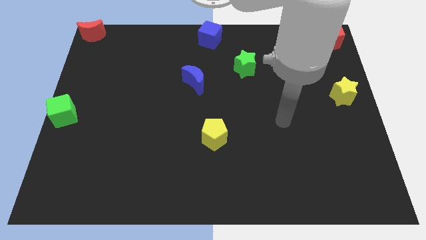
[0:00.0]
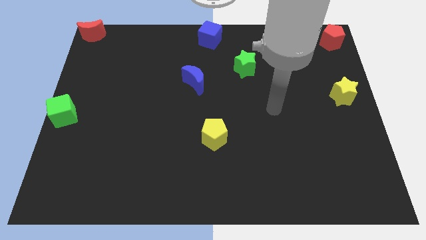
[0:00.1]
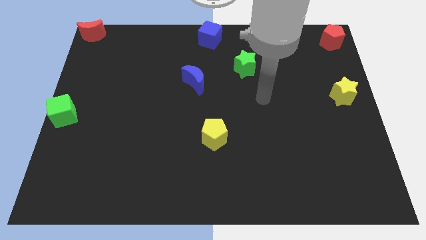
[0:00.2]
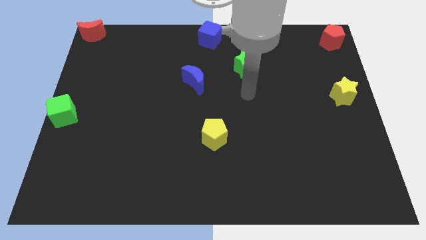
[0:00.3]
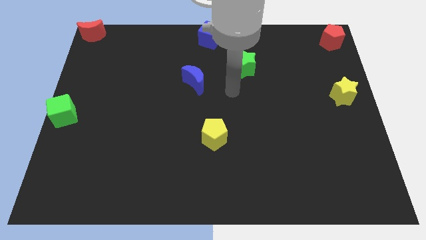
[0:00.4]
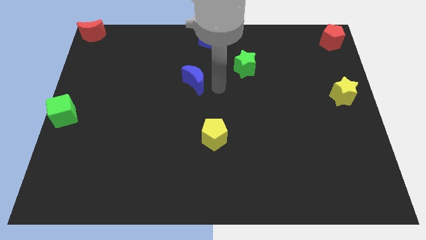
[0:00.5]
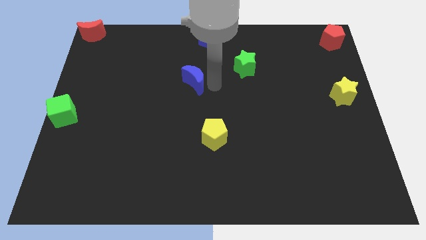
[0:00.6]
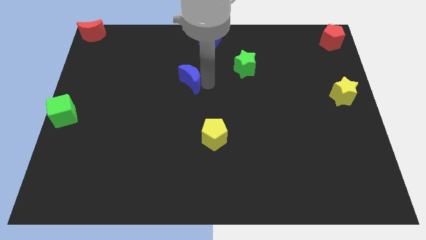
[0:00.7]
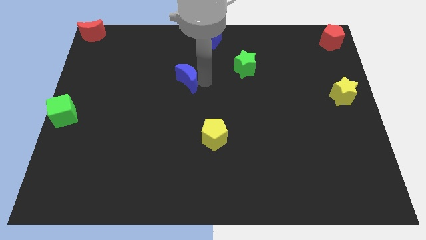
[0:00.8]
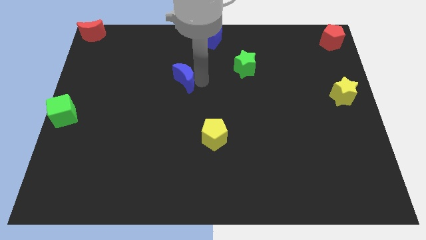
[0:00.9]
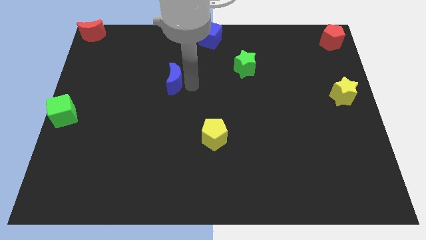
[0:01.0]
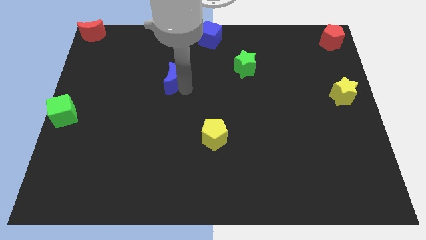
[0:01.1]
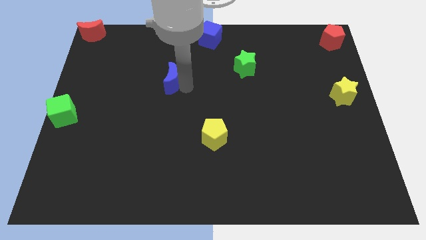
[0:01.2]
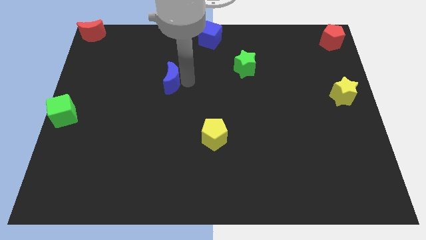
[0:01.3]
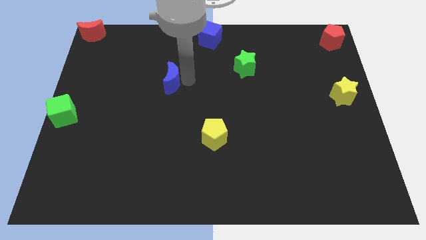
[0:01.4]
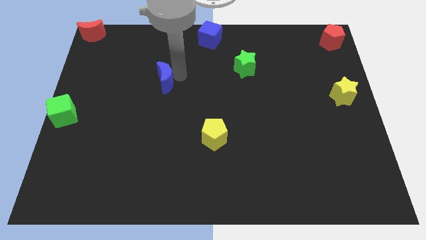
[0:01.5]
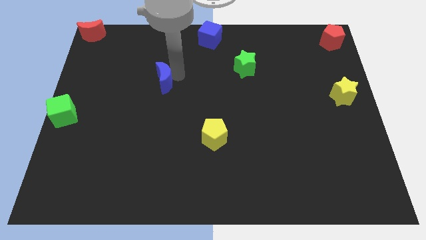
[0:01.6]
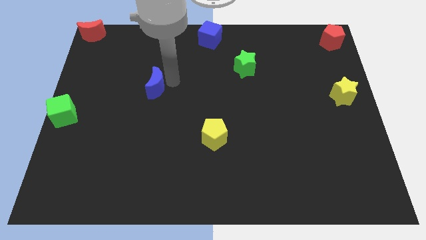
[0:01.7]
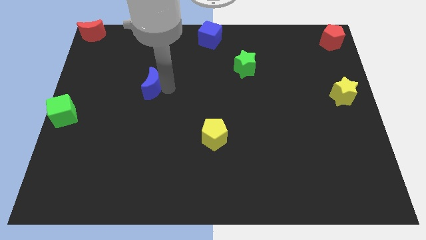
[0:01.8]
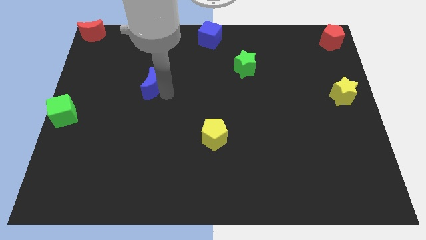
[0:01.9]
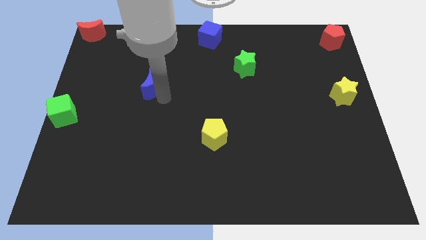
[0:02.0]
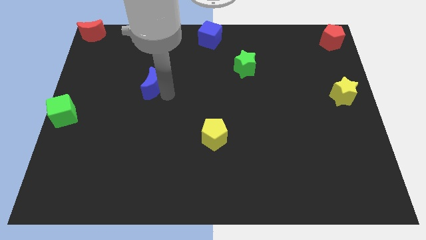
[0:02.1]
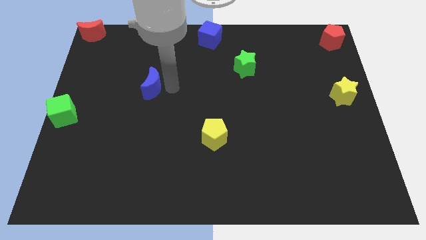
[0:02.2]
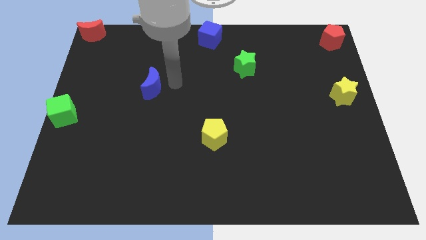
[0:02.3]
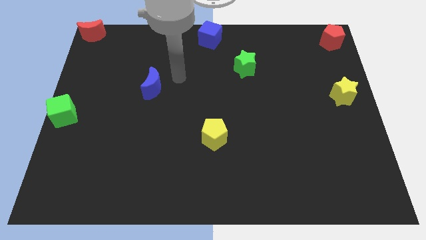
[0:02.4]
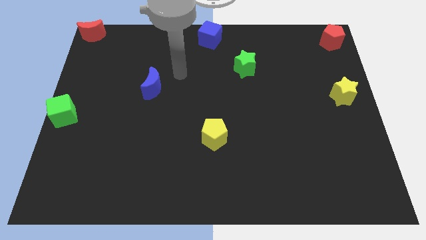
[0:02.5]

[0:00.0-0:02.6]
push the blue moon slightly to the left

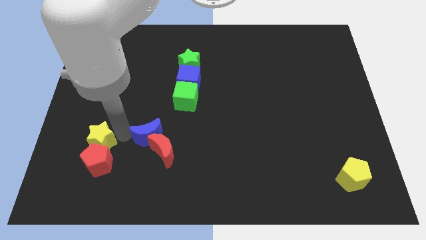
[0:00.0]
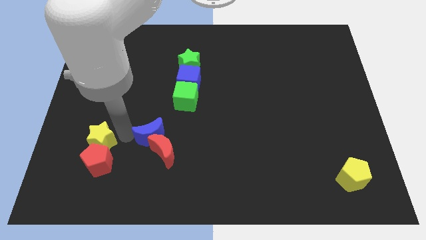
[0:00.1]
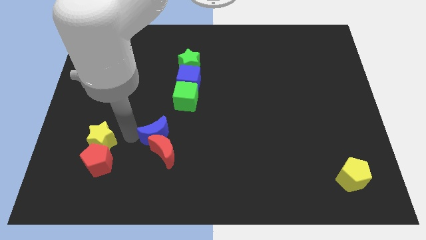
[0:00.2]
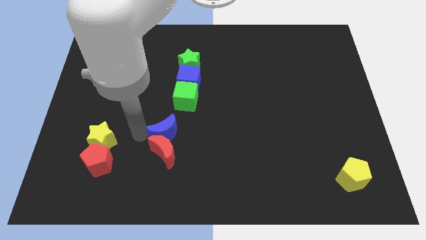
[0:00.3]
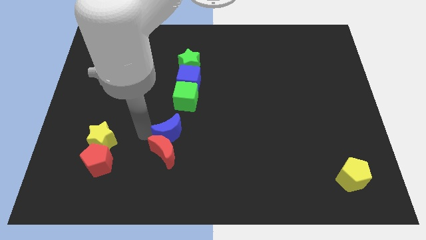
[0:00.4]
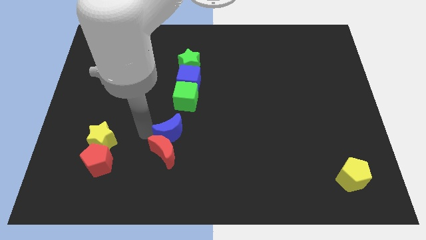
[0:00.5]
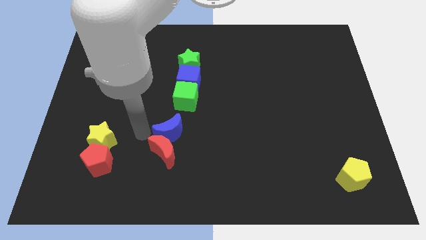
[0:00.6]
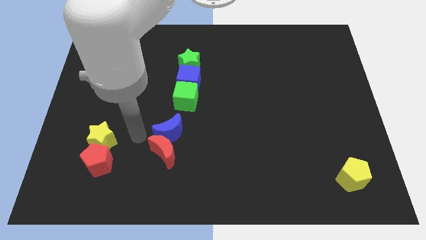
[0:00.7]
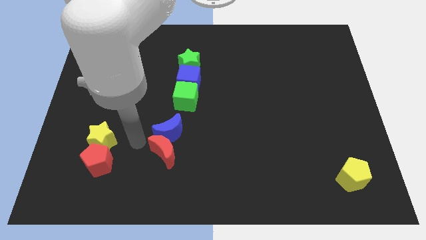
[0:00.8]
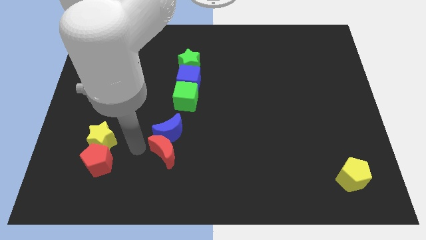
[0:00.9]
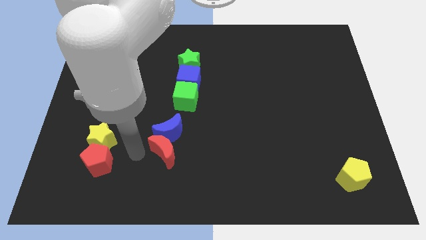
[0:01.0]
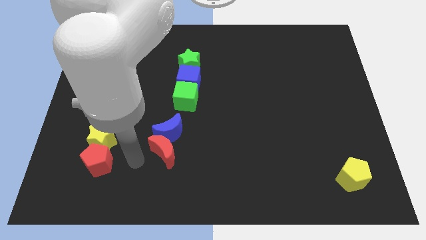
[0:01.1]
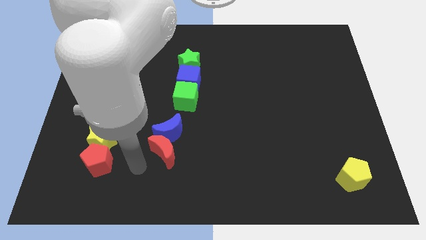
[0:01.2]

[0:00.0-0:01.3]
place blue crescent on top of red crescent

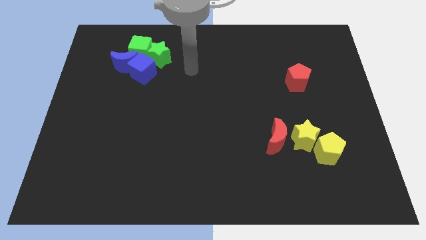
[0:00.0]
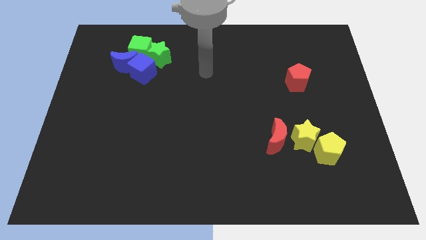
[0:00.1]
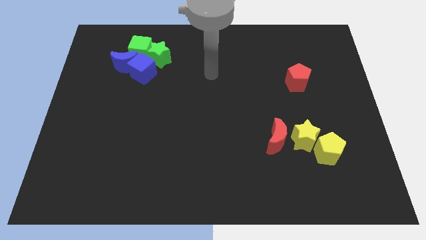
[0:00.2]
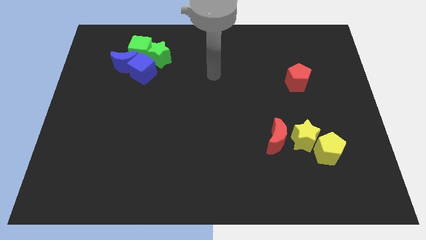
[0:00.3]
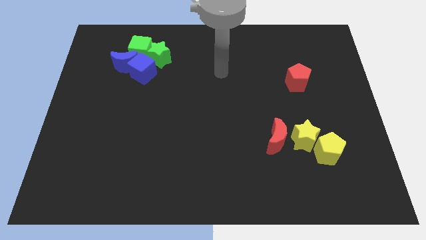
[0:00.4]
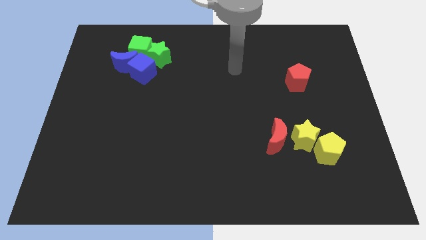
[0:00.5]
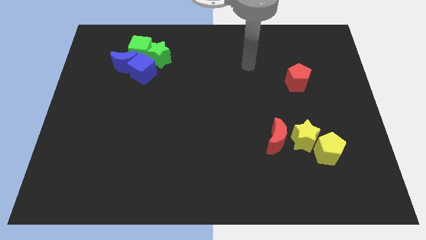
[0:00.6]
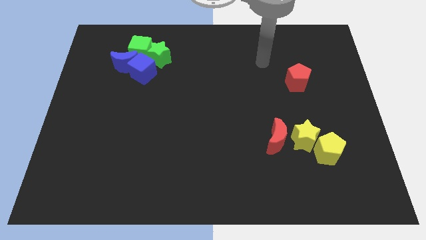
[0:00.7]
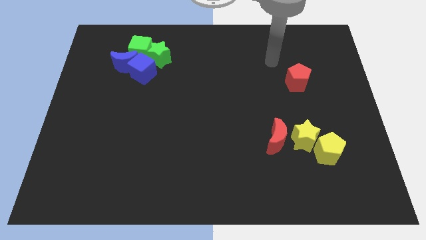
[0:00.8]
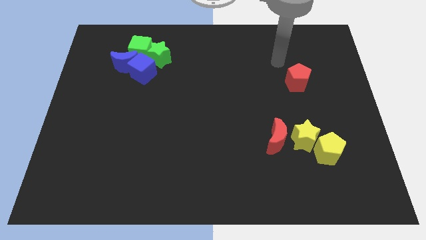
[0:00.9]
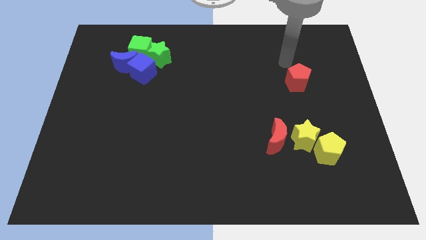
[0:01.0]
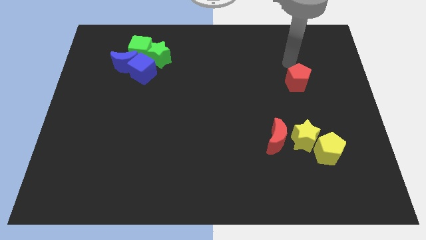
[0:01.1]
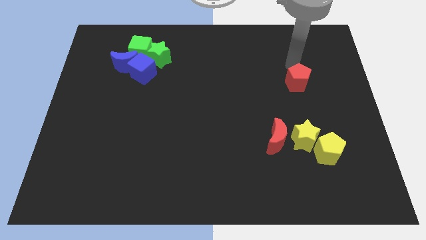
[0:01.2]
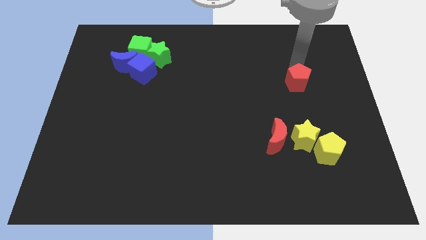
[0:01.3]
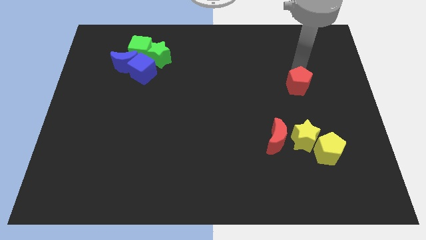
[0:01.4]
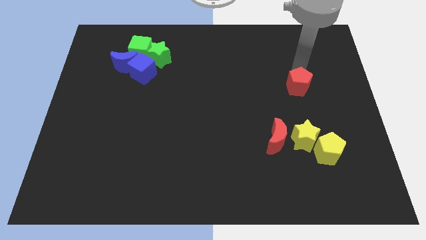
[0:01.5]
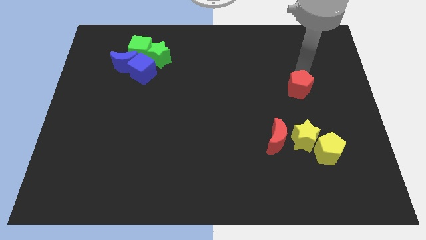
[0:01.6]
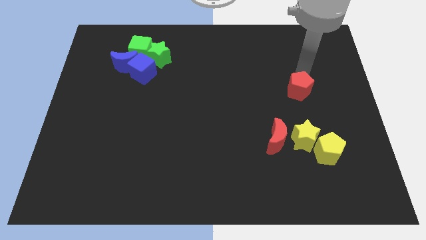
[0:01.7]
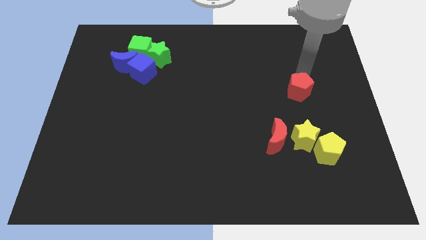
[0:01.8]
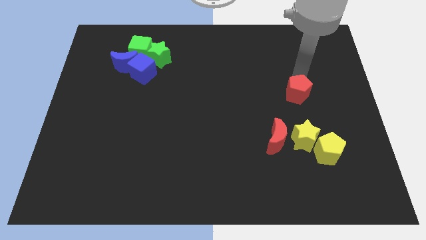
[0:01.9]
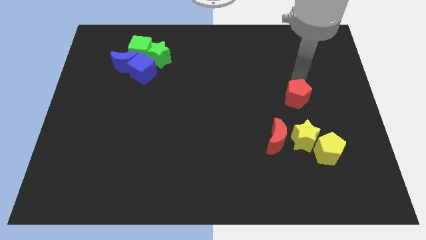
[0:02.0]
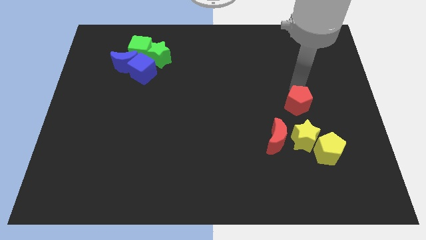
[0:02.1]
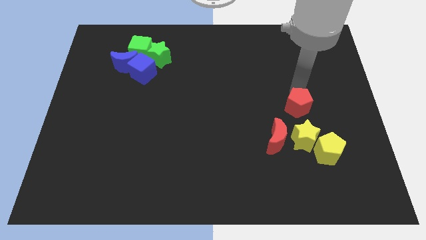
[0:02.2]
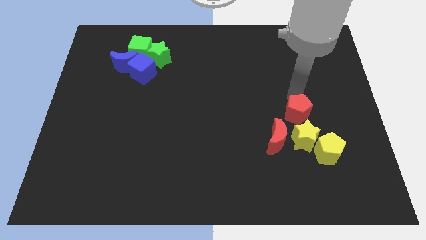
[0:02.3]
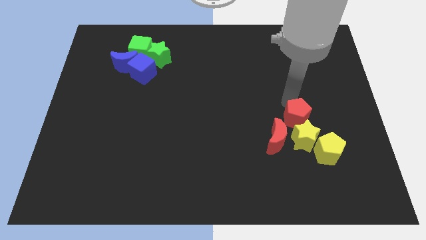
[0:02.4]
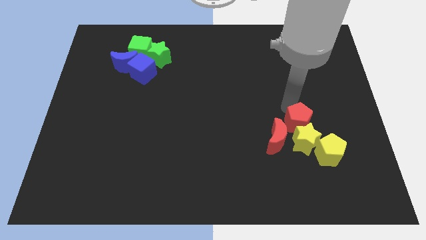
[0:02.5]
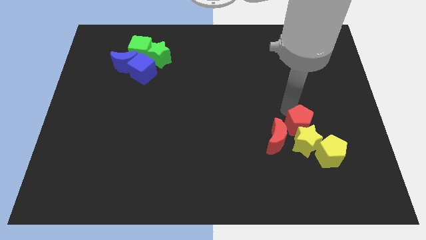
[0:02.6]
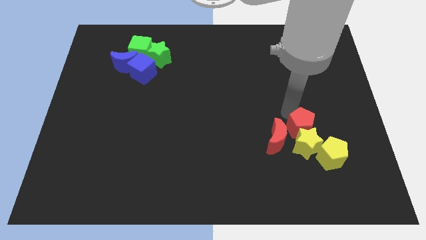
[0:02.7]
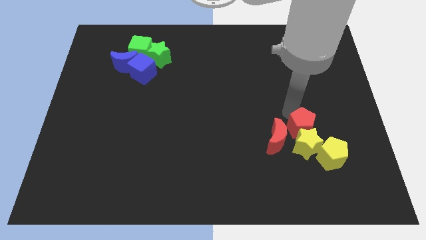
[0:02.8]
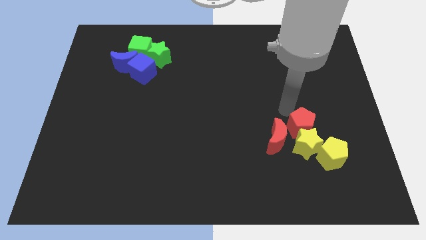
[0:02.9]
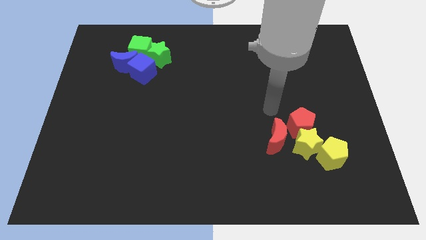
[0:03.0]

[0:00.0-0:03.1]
slide red pentagon on top of yellow star

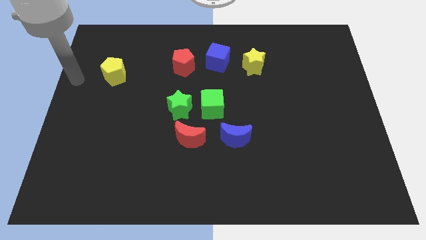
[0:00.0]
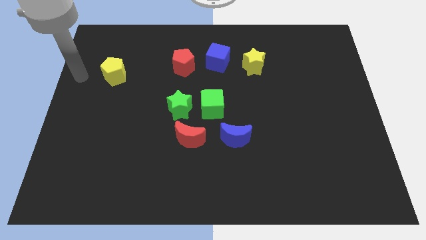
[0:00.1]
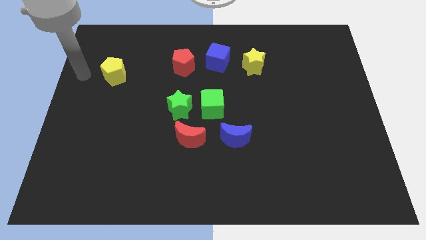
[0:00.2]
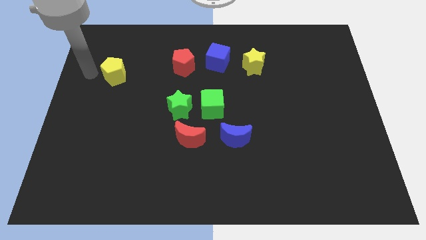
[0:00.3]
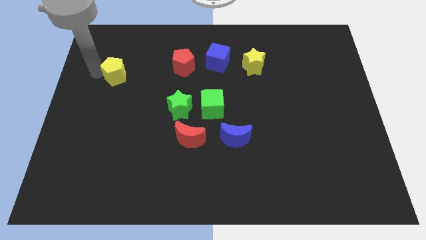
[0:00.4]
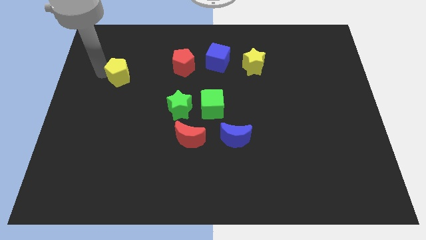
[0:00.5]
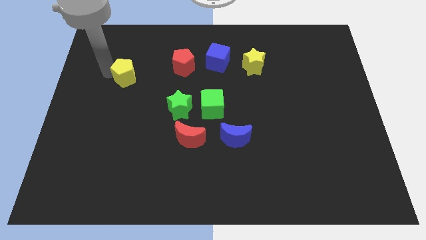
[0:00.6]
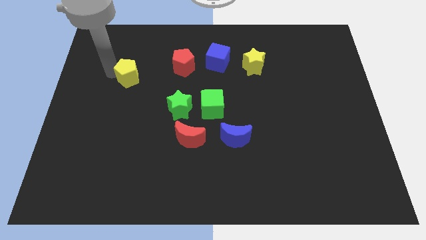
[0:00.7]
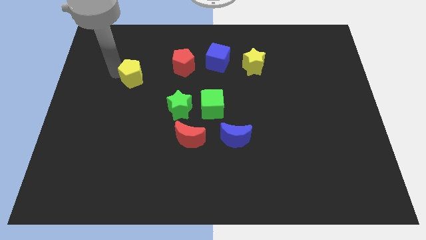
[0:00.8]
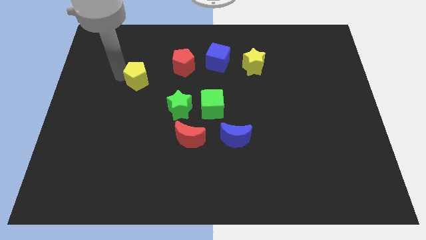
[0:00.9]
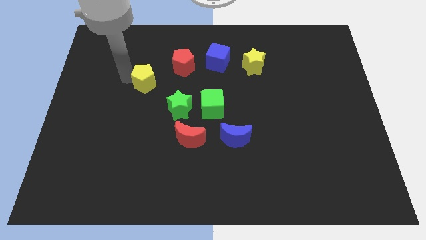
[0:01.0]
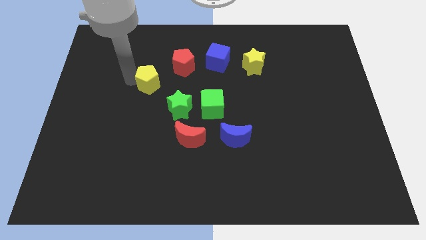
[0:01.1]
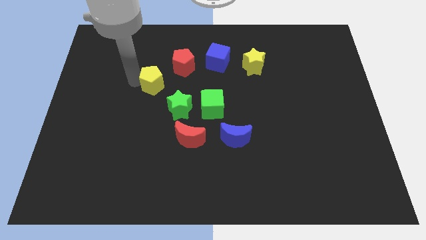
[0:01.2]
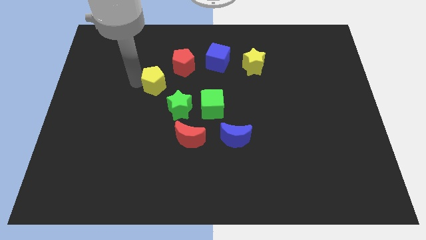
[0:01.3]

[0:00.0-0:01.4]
push yellow pentagon towards center

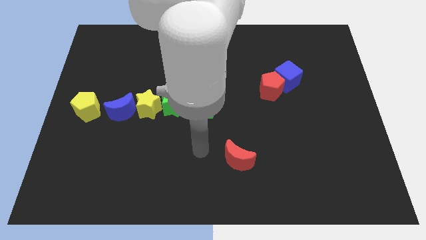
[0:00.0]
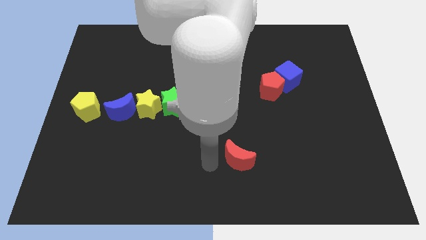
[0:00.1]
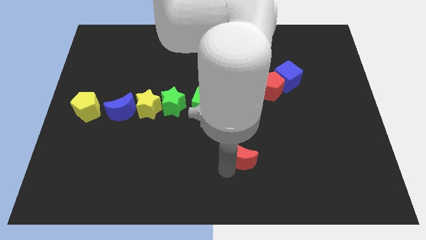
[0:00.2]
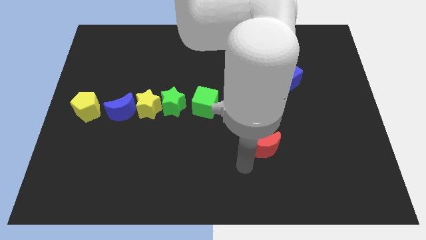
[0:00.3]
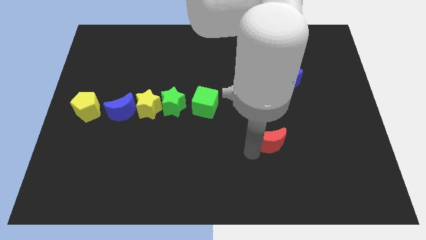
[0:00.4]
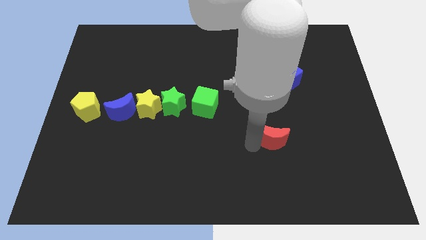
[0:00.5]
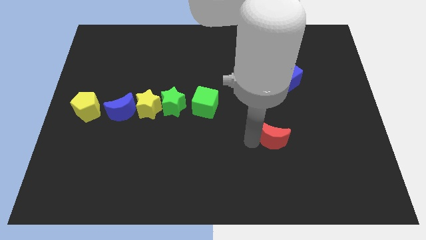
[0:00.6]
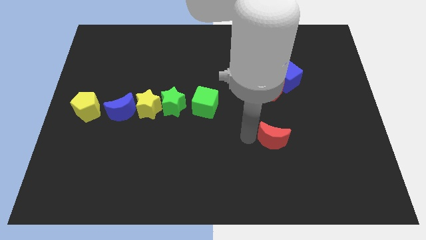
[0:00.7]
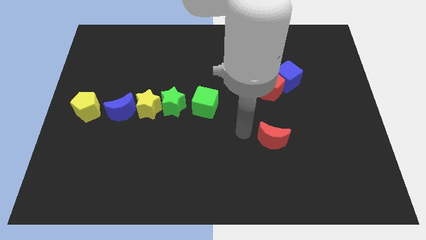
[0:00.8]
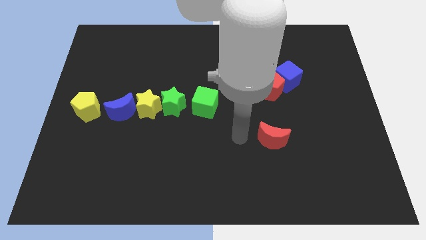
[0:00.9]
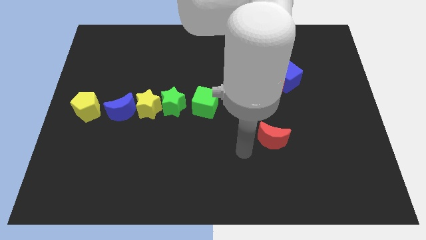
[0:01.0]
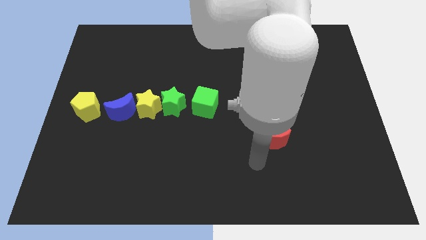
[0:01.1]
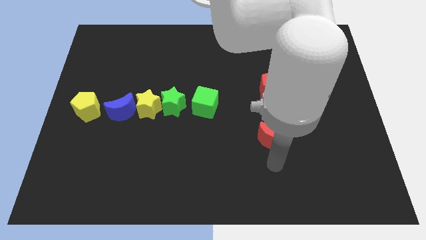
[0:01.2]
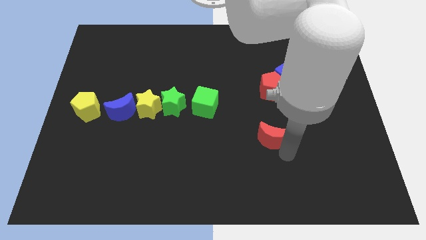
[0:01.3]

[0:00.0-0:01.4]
put the red crescent vertically below the red pentagon
